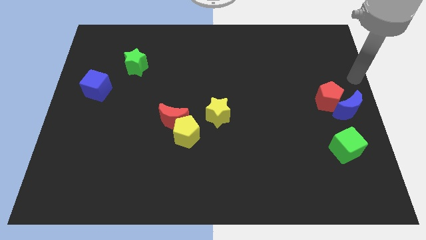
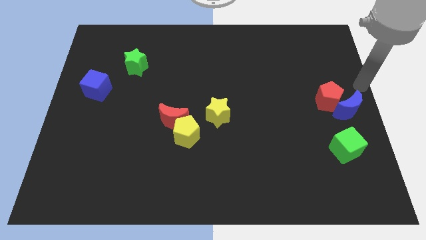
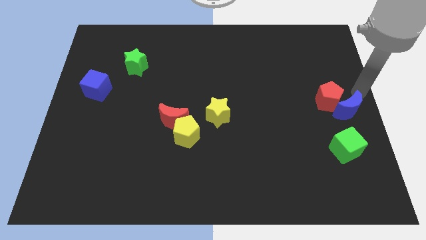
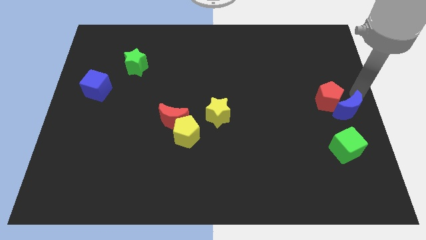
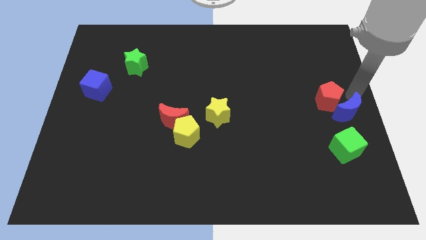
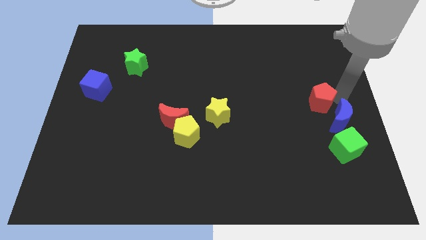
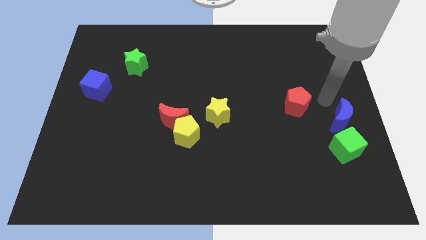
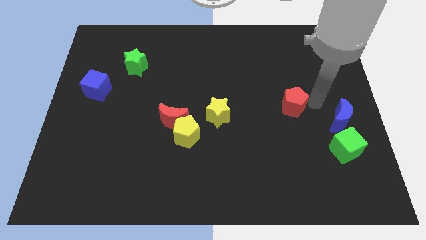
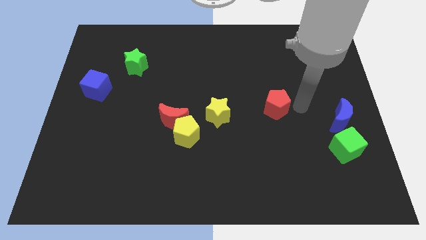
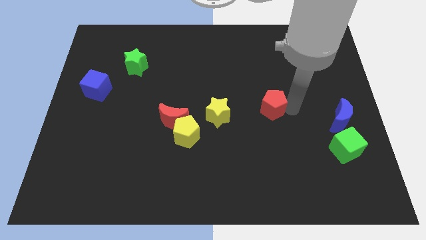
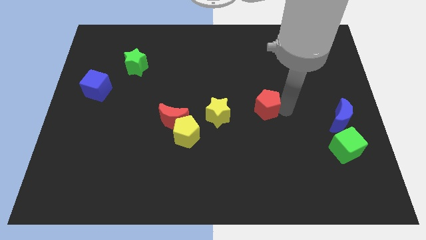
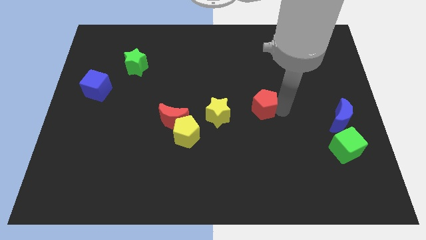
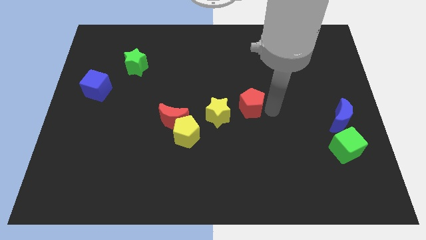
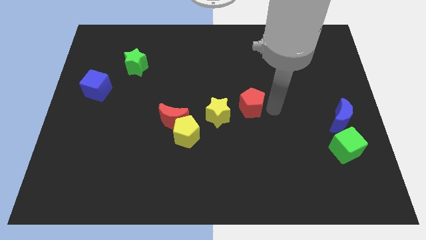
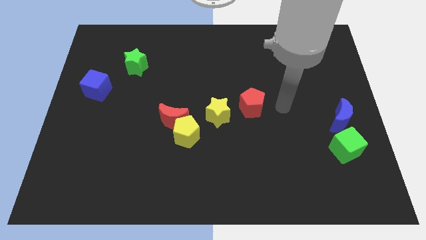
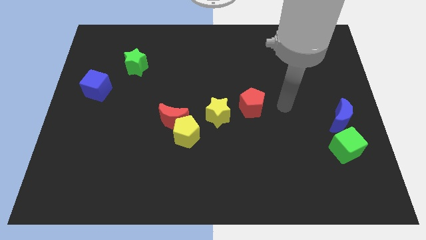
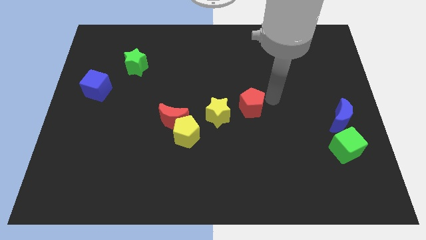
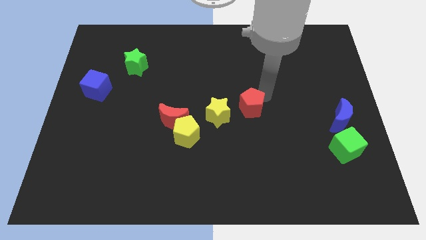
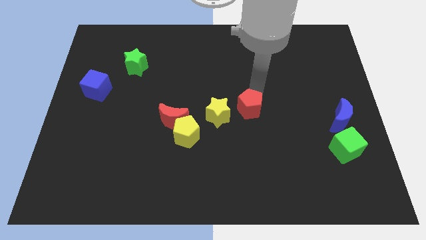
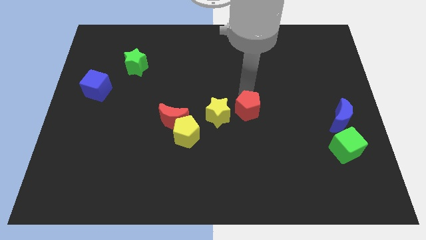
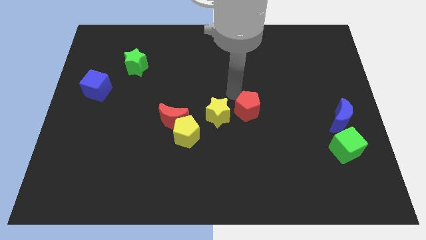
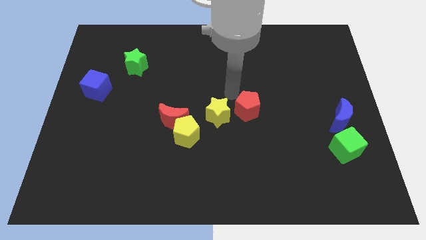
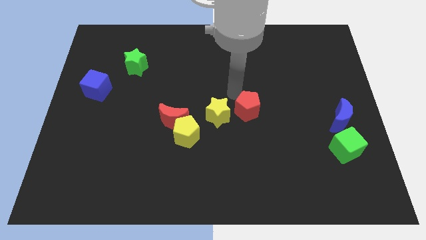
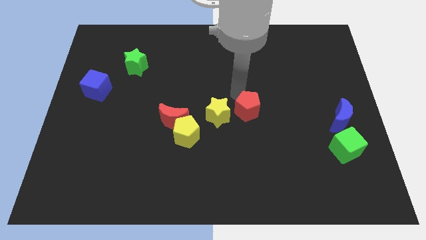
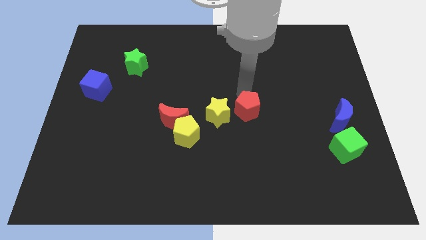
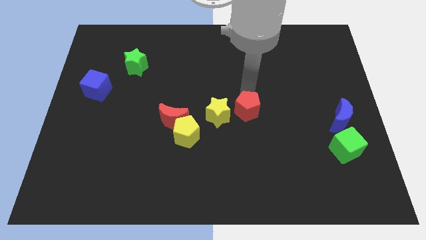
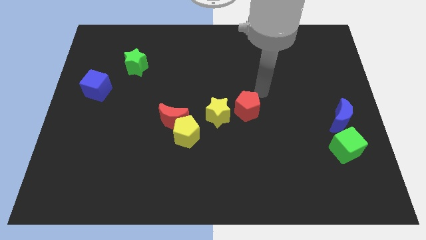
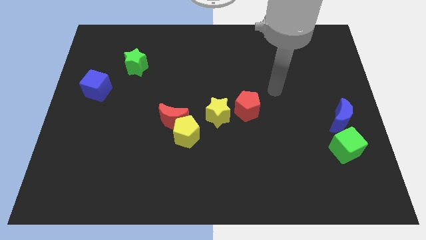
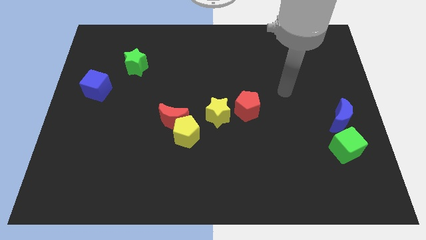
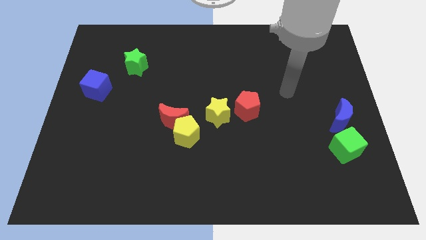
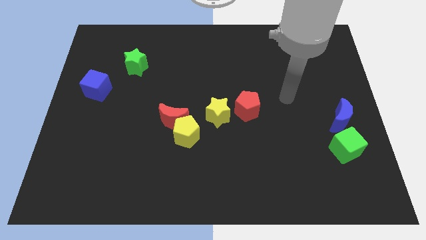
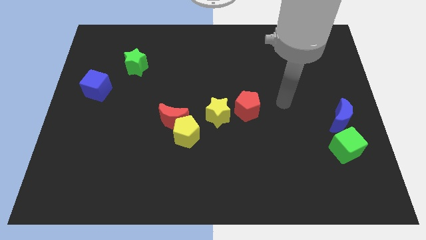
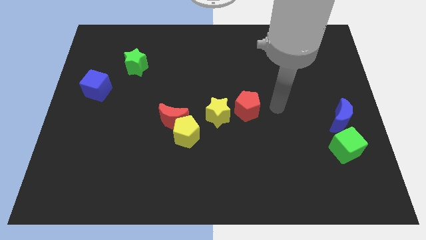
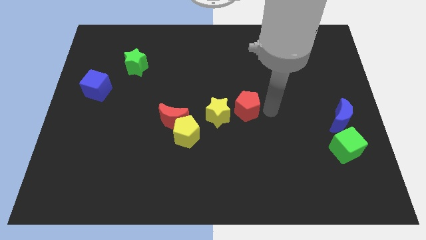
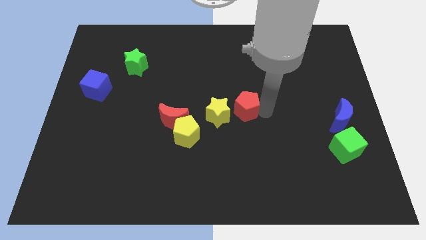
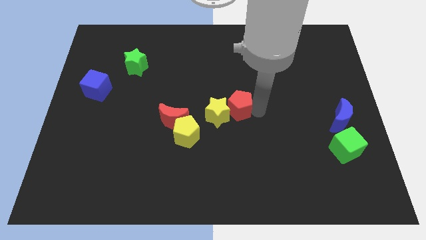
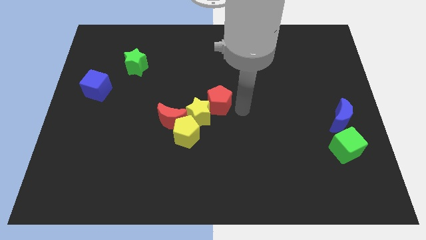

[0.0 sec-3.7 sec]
push the red pentagon into the yellow star

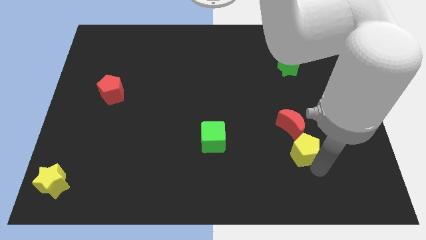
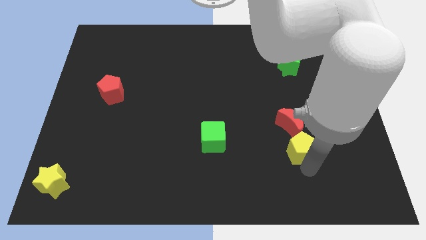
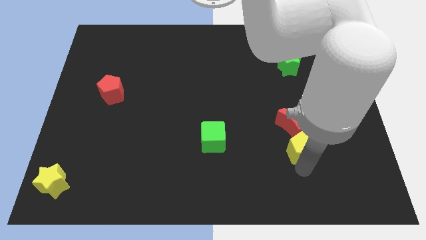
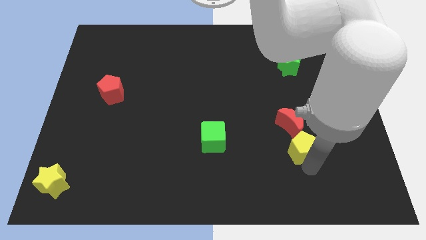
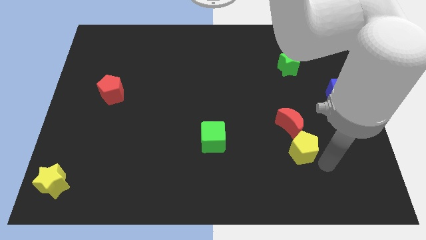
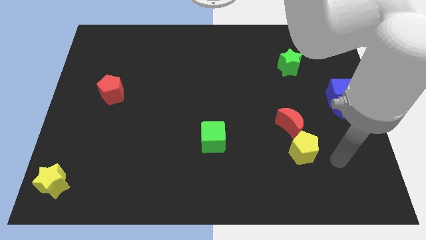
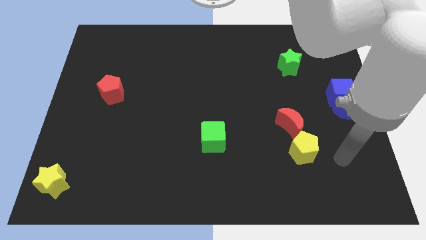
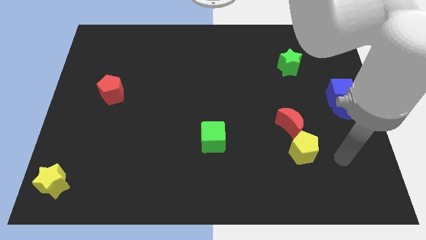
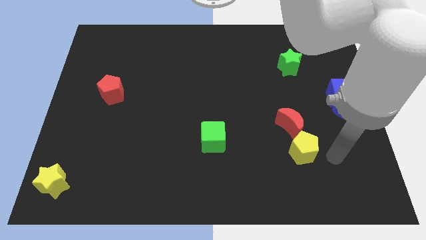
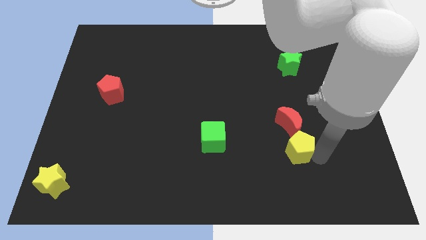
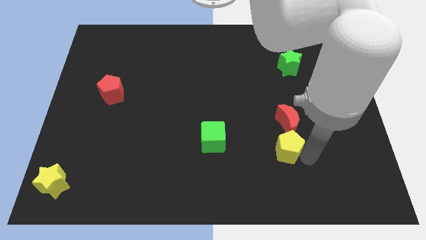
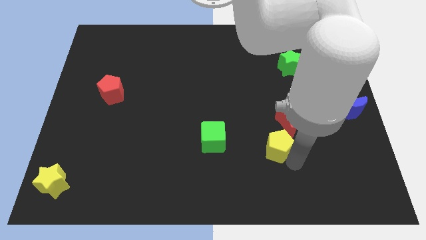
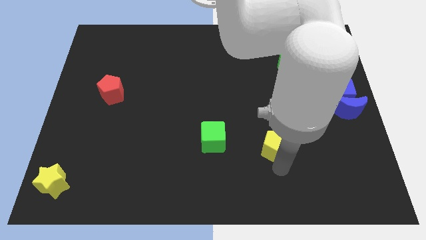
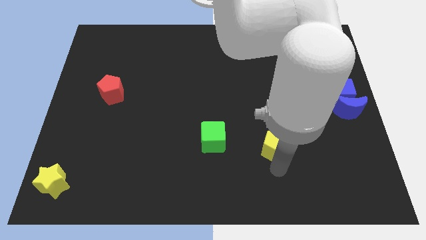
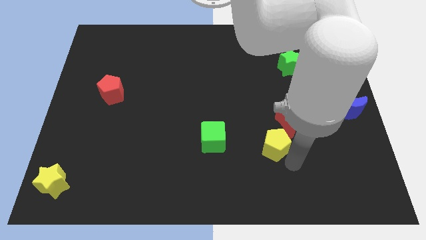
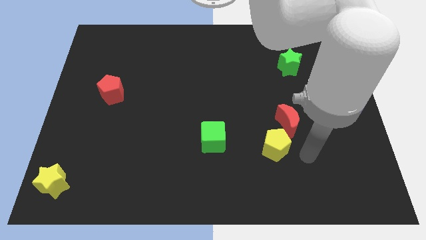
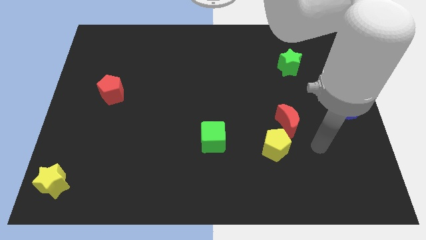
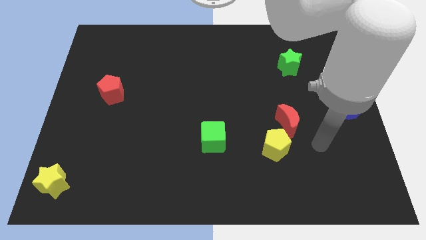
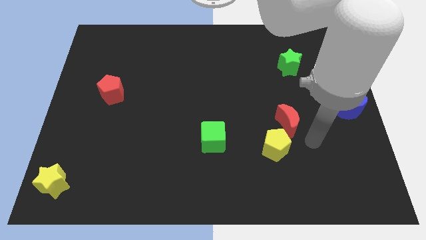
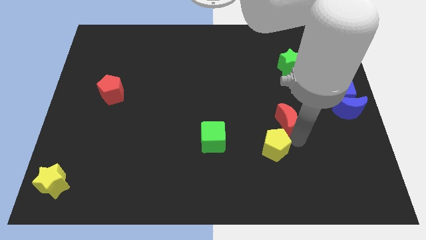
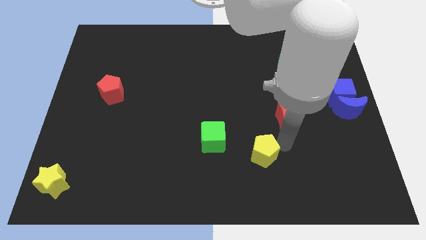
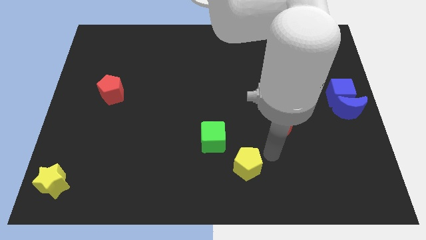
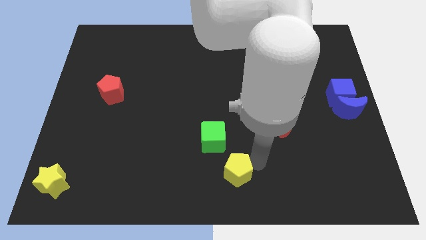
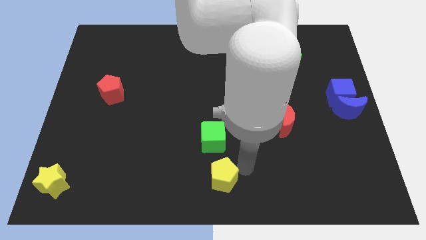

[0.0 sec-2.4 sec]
separate yellow pentagon from red moon

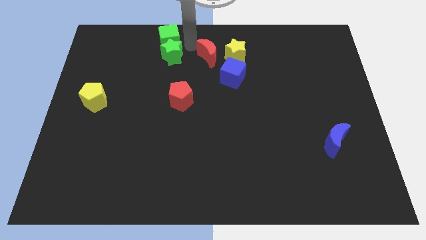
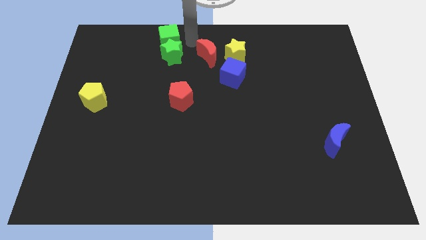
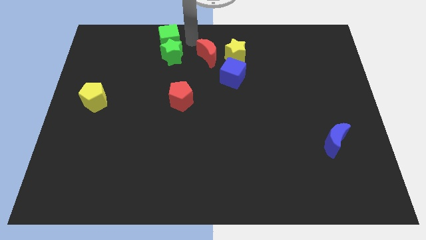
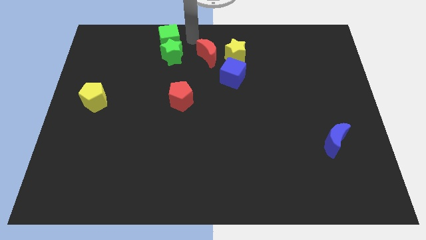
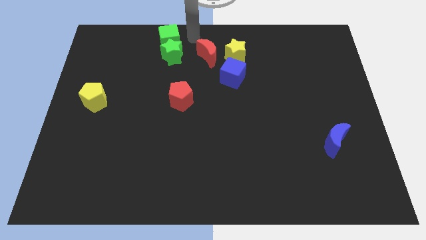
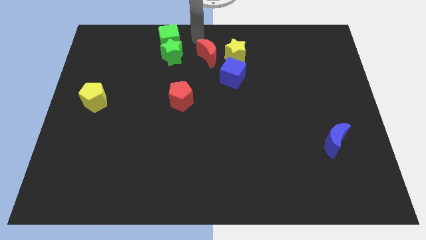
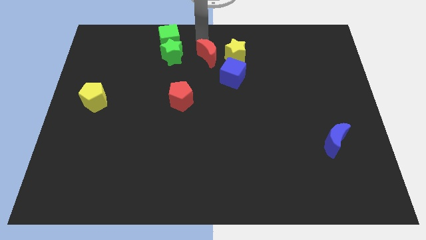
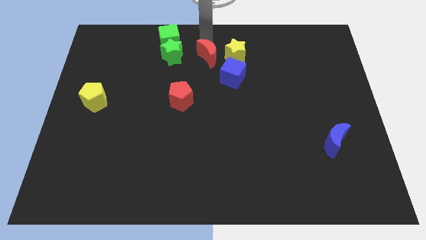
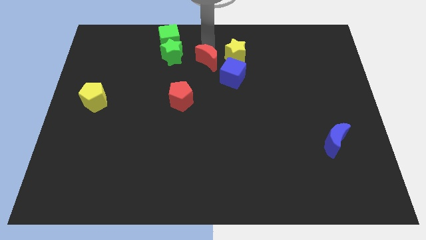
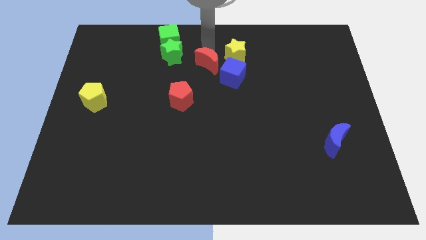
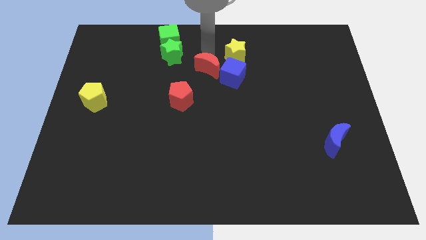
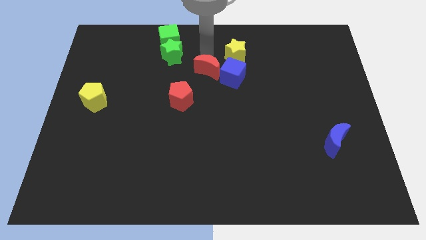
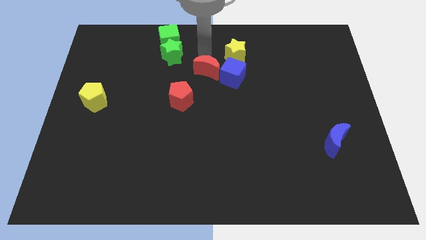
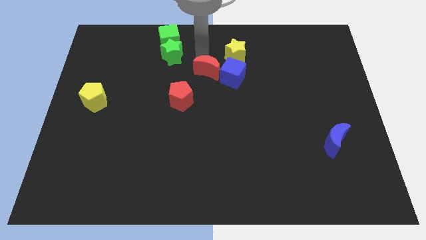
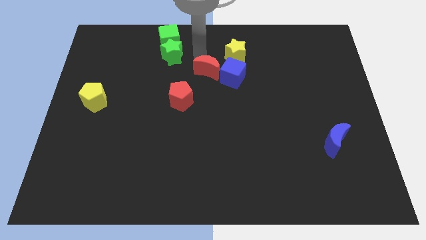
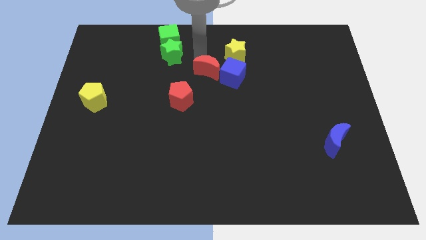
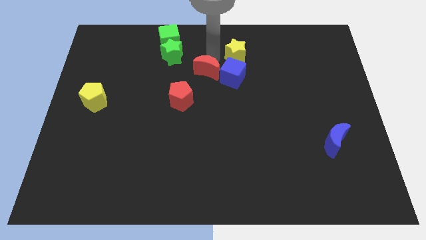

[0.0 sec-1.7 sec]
push the red crescent towards the left side of the blue cube

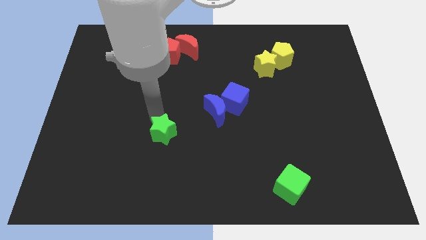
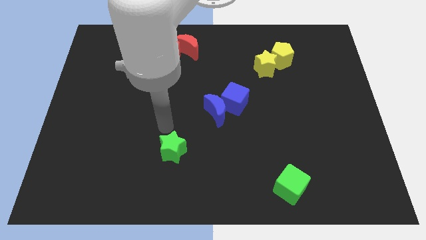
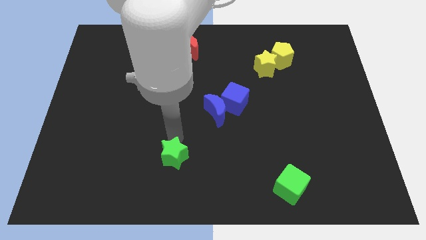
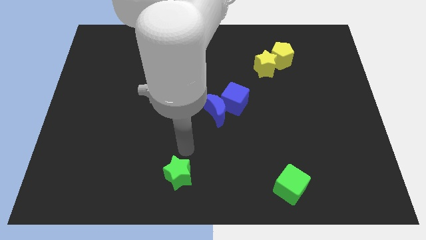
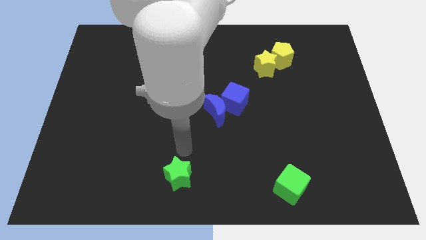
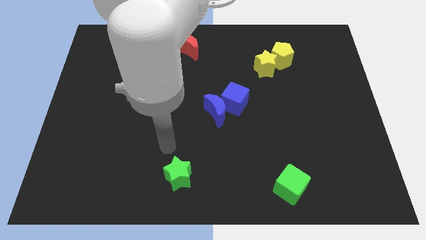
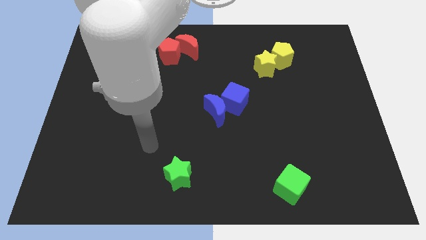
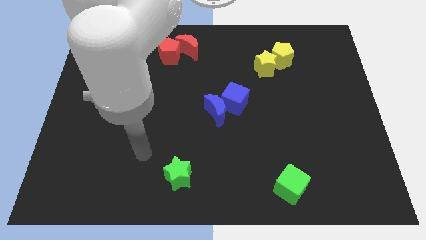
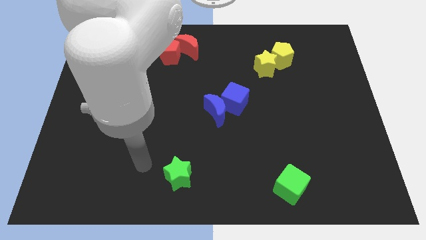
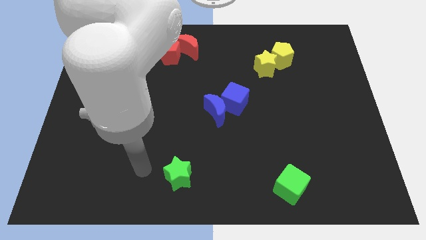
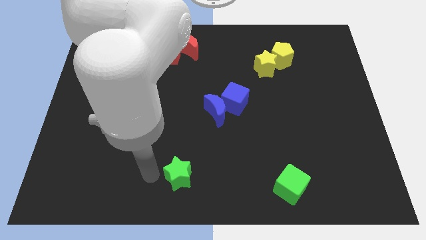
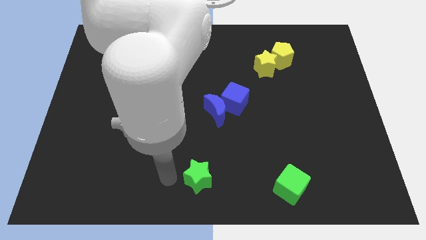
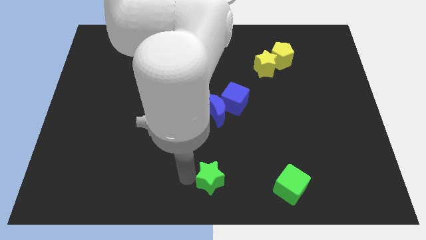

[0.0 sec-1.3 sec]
push the green star to the left of green cube
